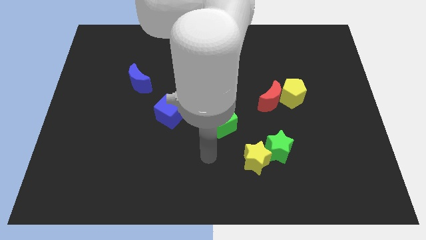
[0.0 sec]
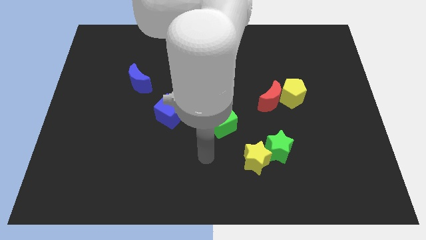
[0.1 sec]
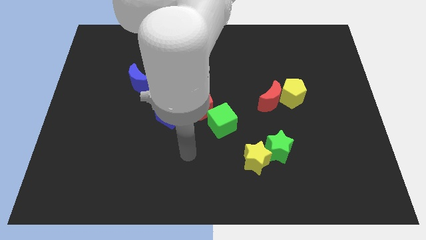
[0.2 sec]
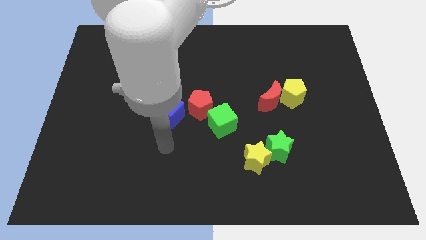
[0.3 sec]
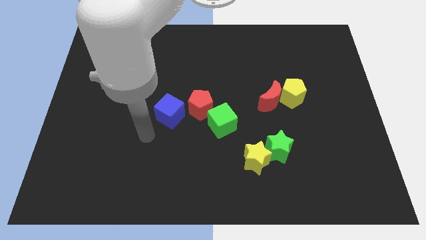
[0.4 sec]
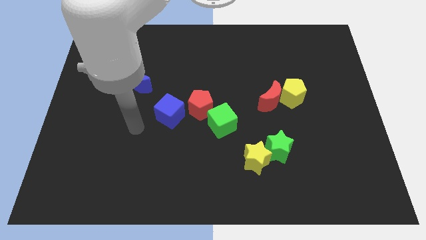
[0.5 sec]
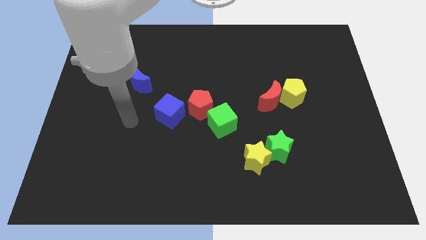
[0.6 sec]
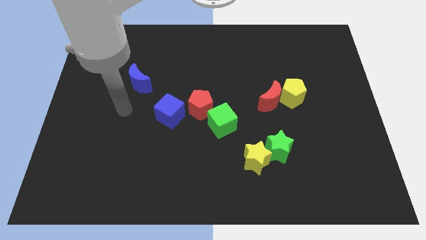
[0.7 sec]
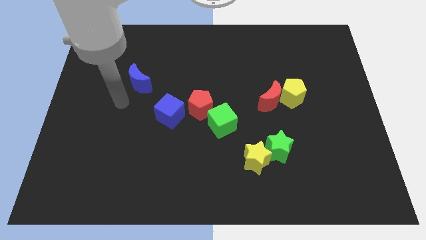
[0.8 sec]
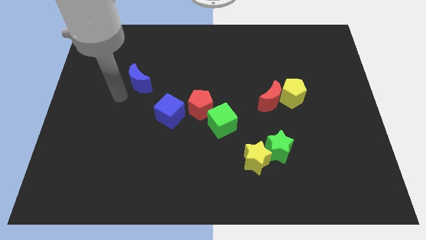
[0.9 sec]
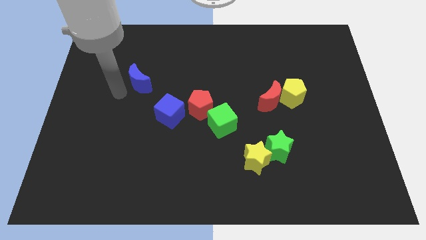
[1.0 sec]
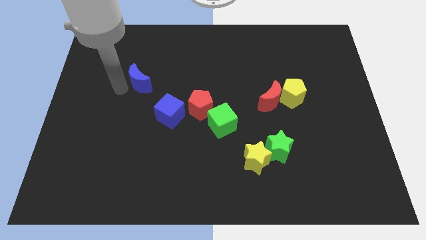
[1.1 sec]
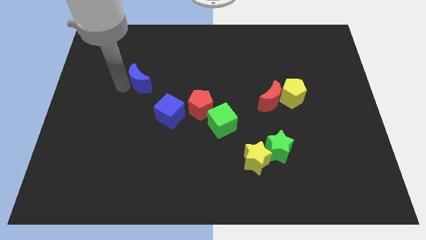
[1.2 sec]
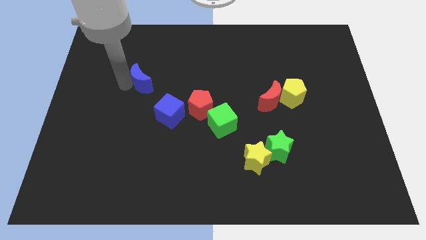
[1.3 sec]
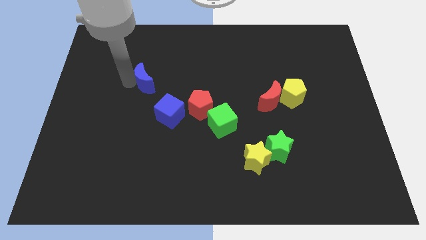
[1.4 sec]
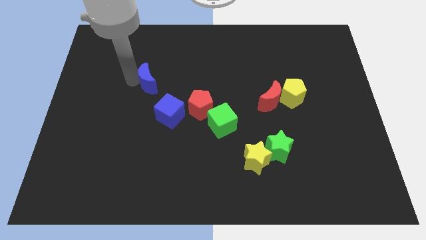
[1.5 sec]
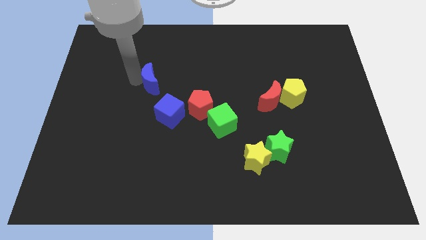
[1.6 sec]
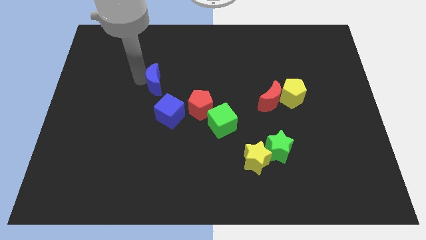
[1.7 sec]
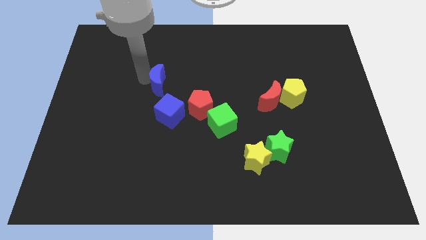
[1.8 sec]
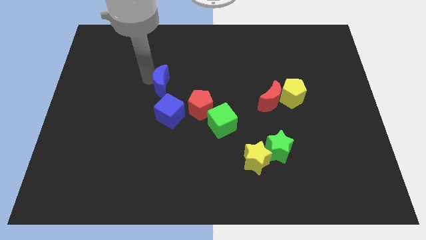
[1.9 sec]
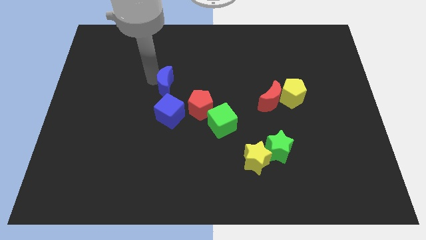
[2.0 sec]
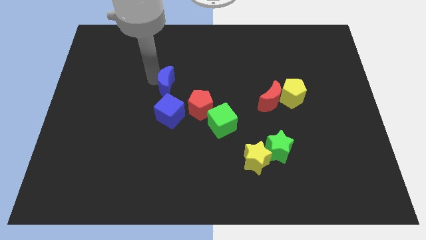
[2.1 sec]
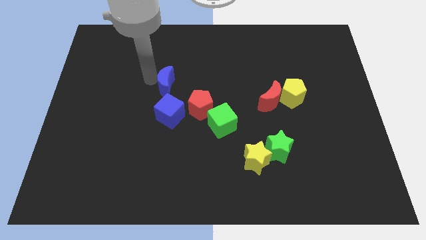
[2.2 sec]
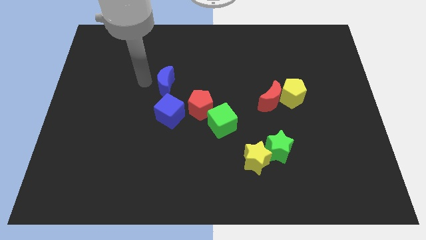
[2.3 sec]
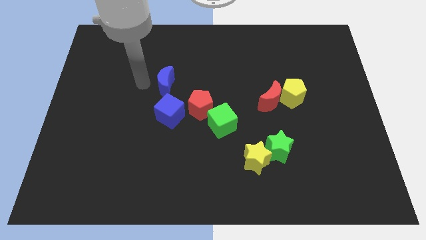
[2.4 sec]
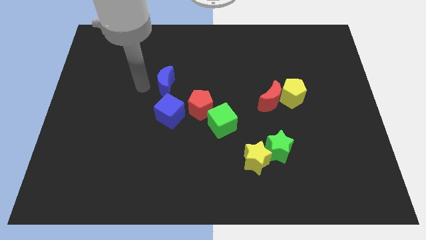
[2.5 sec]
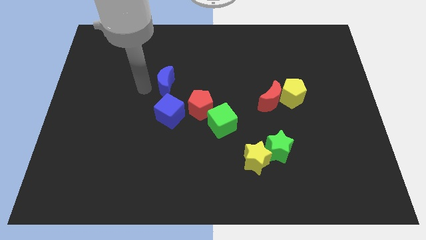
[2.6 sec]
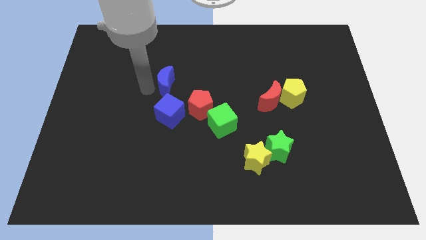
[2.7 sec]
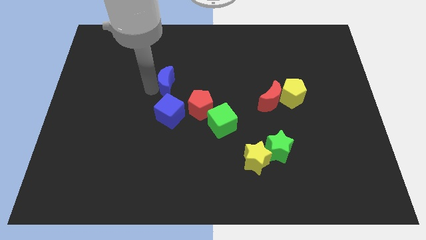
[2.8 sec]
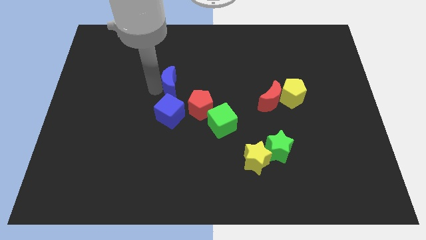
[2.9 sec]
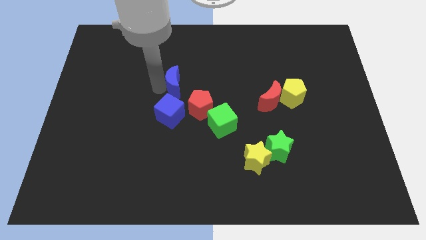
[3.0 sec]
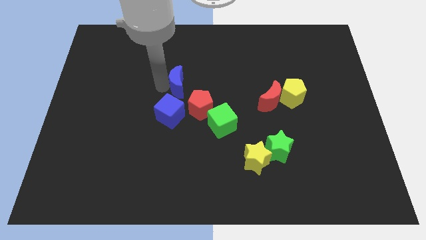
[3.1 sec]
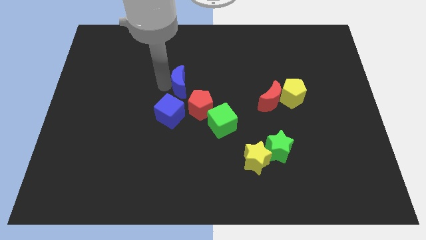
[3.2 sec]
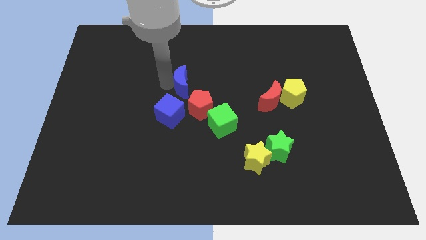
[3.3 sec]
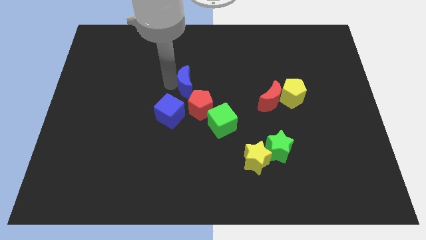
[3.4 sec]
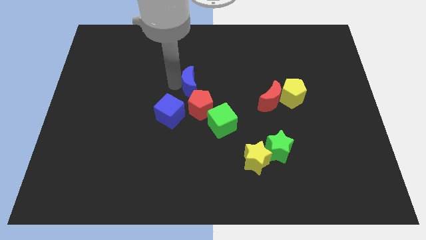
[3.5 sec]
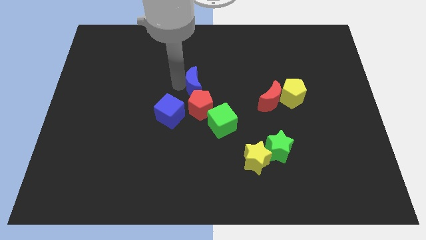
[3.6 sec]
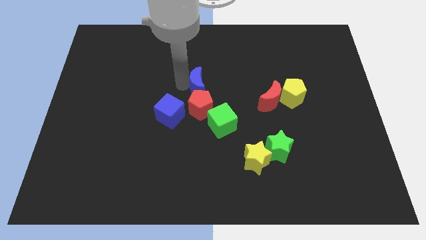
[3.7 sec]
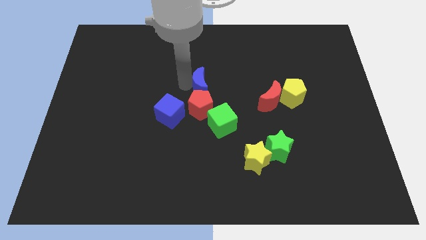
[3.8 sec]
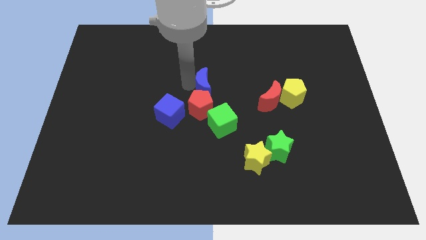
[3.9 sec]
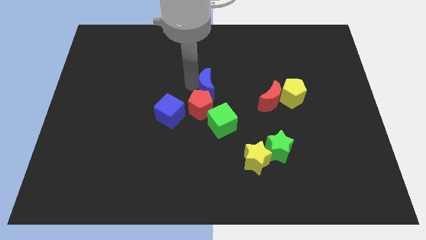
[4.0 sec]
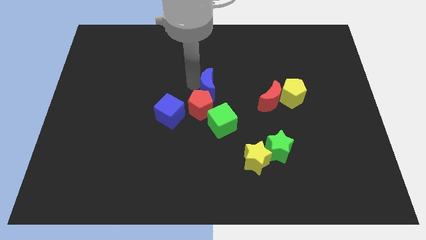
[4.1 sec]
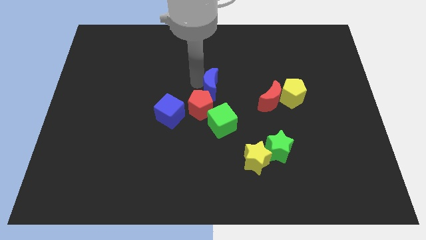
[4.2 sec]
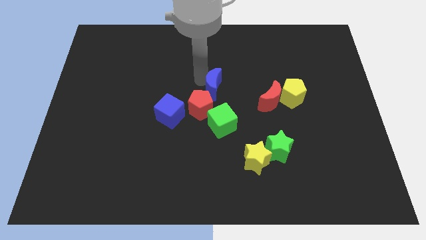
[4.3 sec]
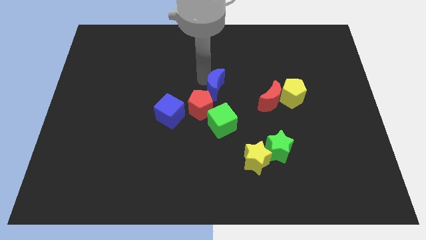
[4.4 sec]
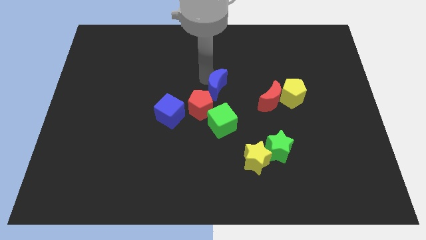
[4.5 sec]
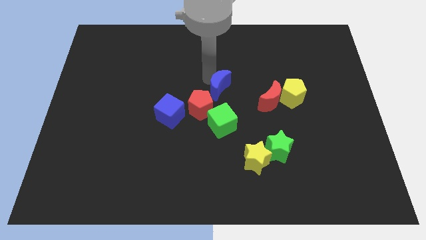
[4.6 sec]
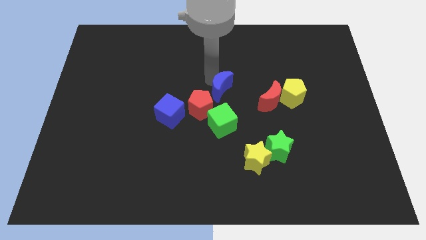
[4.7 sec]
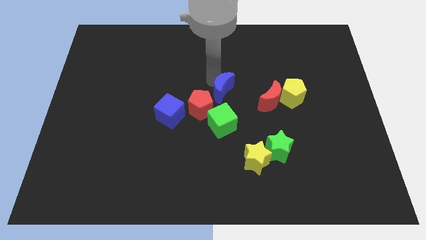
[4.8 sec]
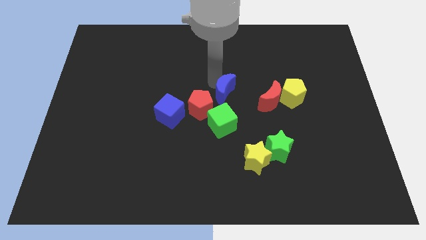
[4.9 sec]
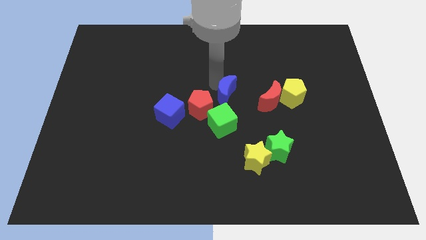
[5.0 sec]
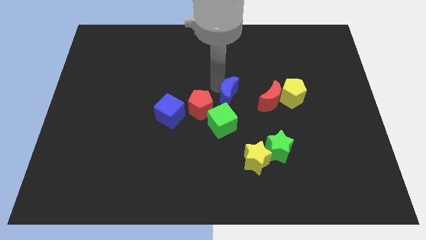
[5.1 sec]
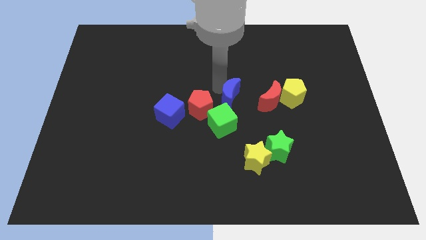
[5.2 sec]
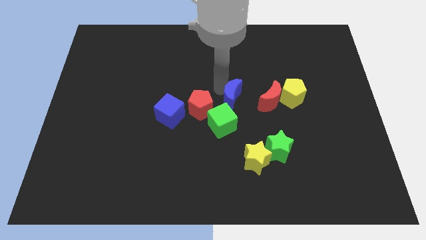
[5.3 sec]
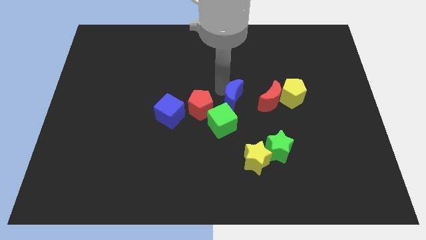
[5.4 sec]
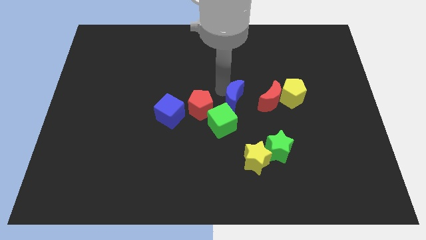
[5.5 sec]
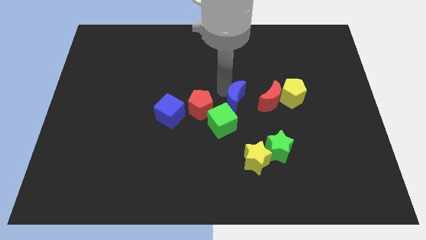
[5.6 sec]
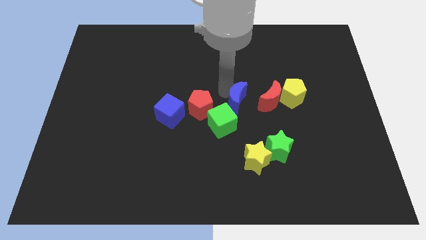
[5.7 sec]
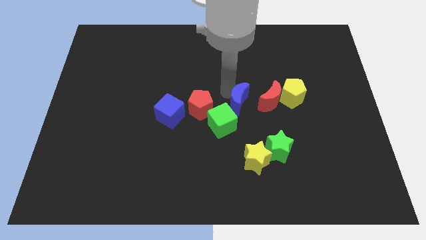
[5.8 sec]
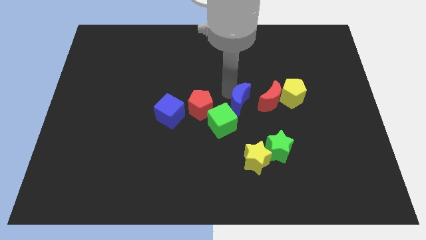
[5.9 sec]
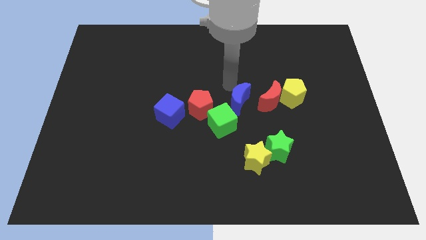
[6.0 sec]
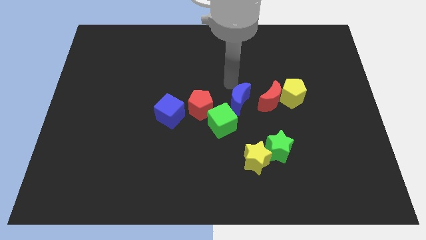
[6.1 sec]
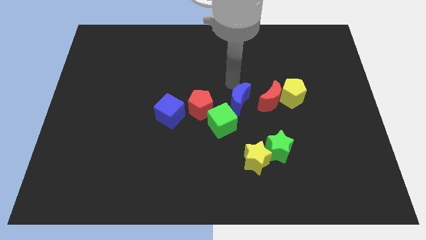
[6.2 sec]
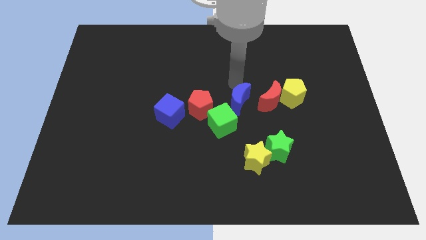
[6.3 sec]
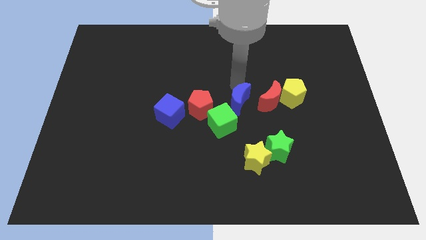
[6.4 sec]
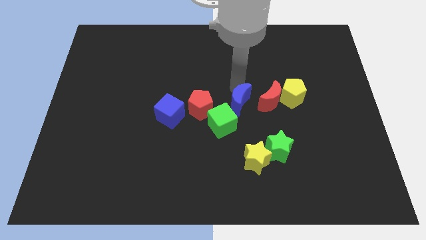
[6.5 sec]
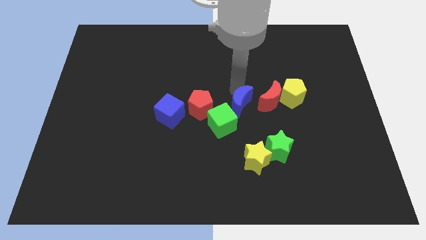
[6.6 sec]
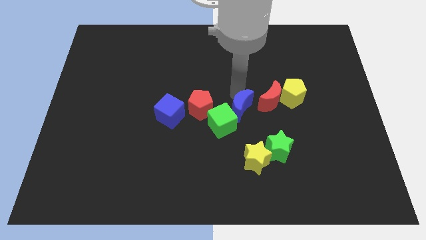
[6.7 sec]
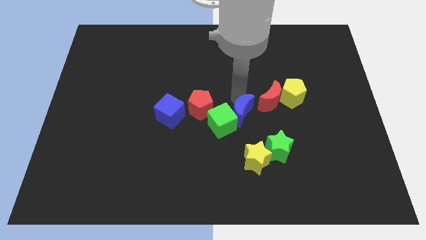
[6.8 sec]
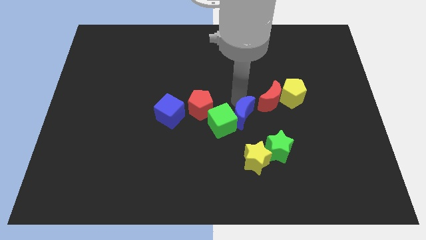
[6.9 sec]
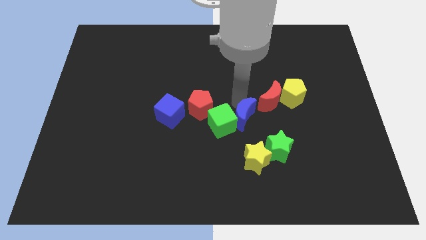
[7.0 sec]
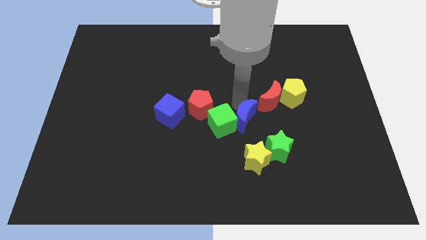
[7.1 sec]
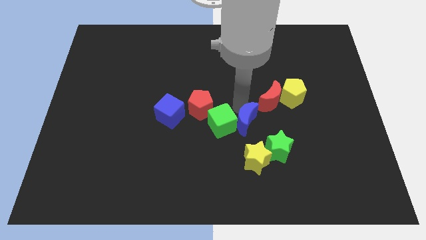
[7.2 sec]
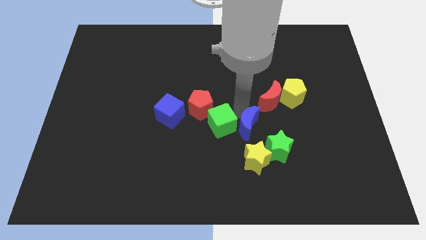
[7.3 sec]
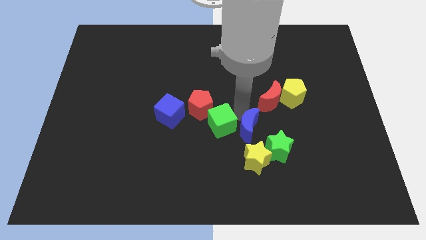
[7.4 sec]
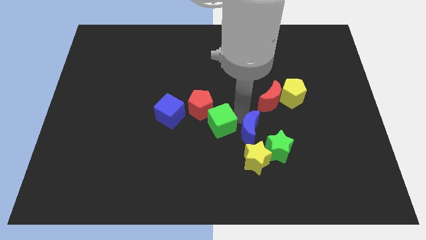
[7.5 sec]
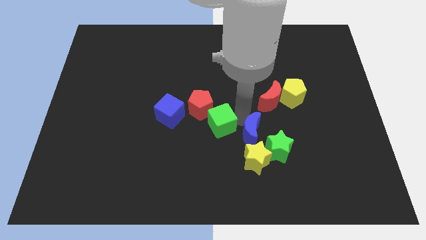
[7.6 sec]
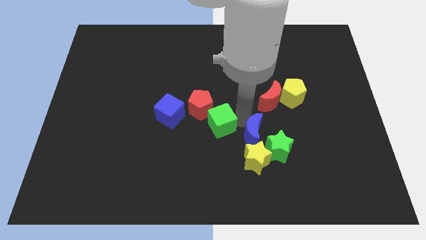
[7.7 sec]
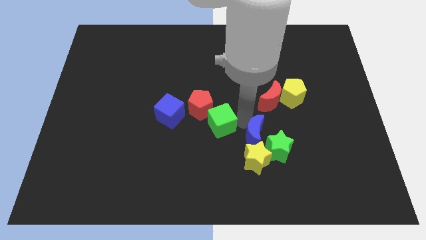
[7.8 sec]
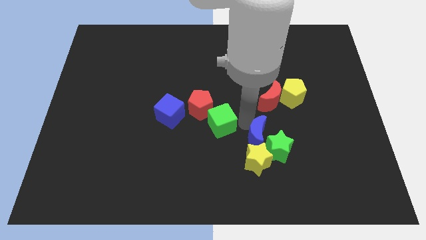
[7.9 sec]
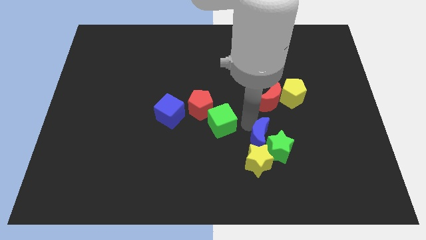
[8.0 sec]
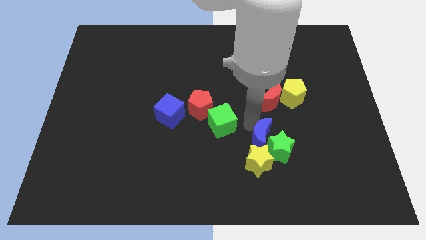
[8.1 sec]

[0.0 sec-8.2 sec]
put the blue moon close to the green star

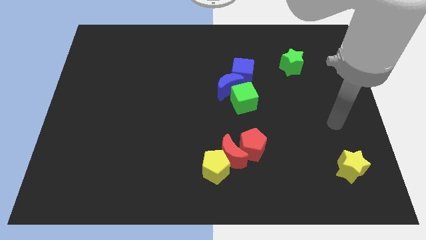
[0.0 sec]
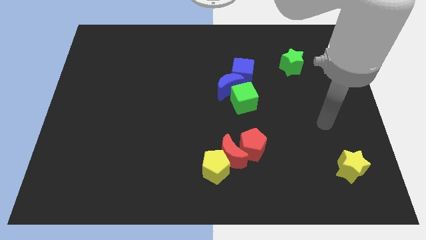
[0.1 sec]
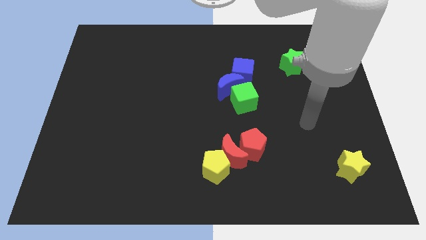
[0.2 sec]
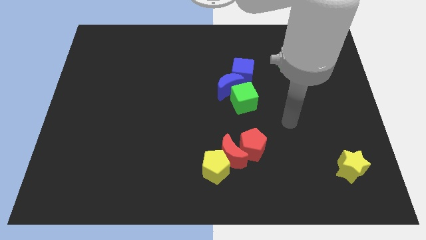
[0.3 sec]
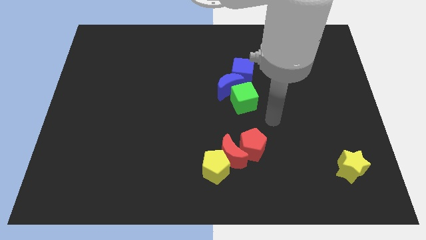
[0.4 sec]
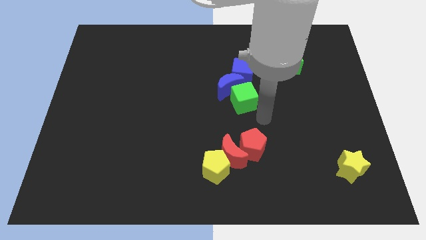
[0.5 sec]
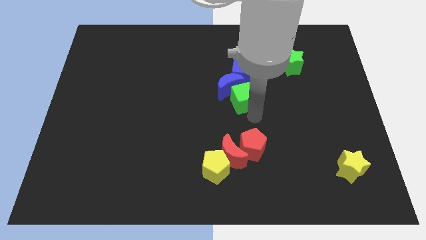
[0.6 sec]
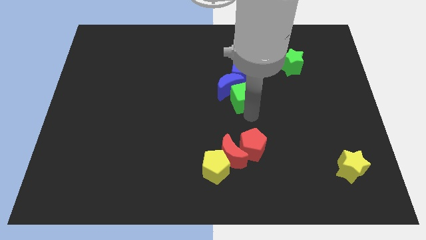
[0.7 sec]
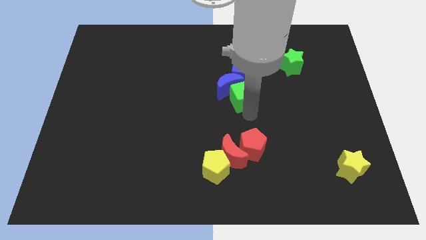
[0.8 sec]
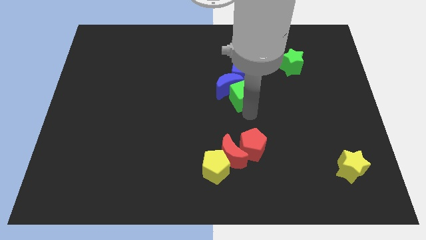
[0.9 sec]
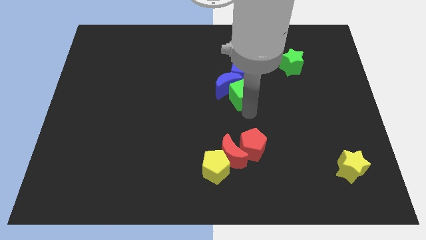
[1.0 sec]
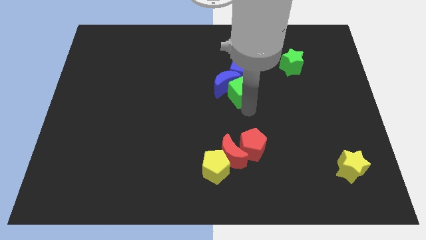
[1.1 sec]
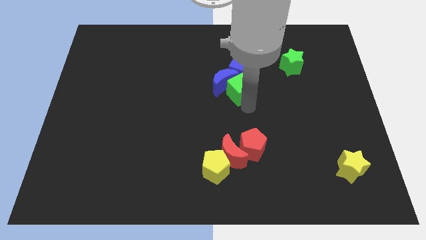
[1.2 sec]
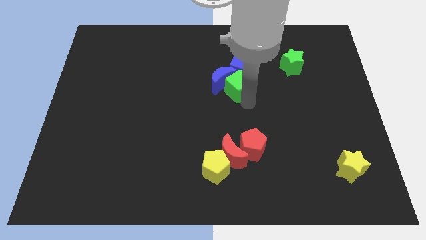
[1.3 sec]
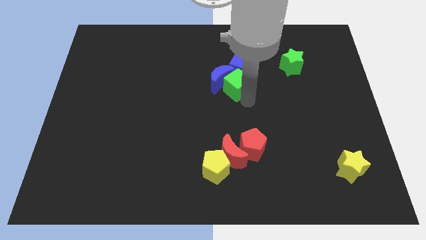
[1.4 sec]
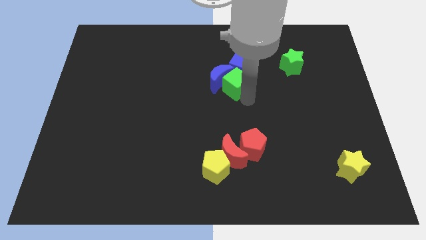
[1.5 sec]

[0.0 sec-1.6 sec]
slide the green cube towards the blue cube
